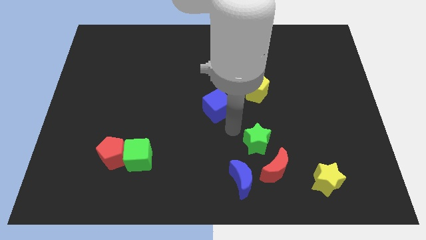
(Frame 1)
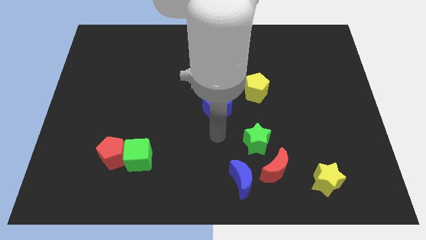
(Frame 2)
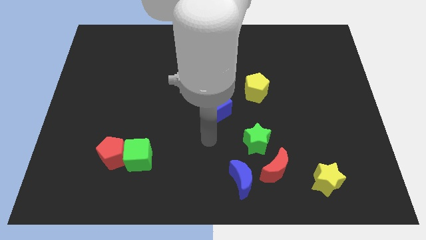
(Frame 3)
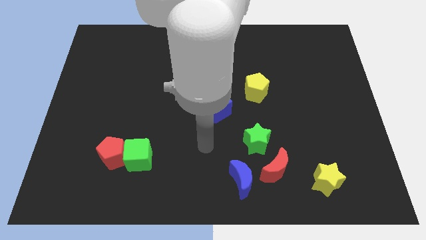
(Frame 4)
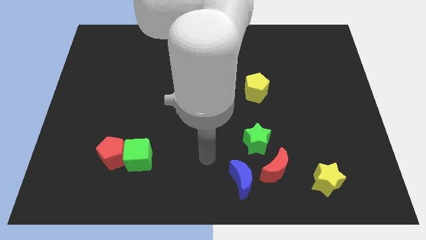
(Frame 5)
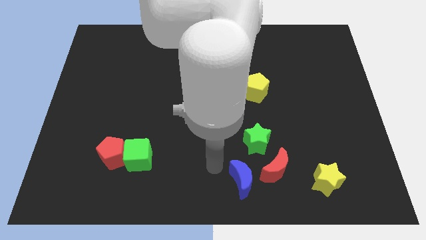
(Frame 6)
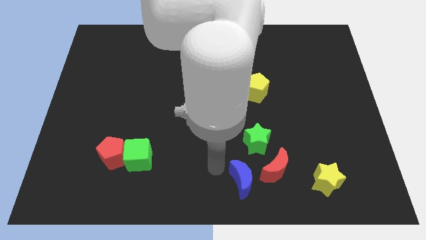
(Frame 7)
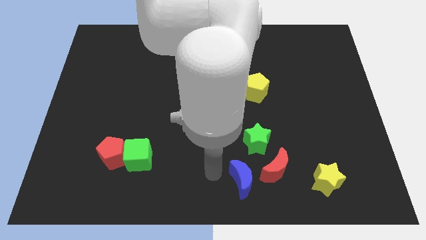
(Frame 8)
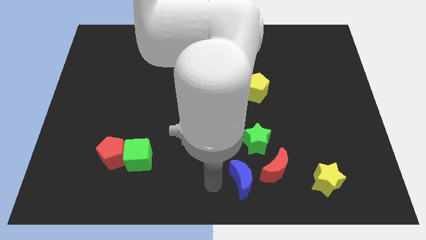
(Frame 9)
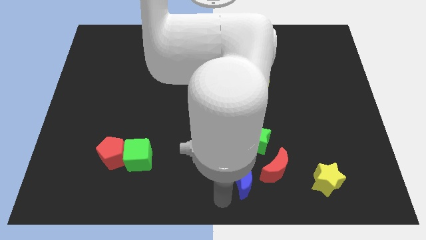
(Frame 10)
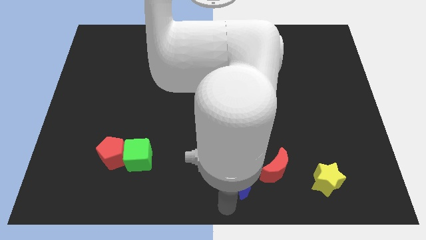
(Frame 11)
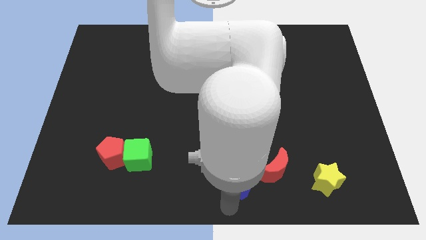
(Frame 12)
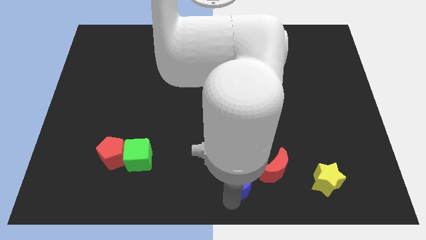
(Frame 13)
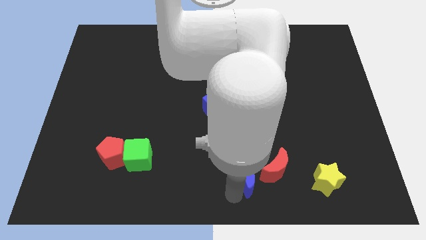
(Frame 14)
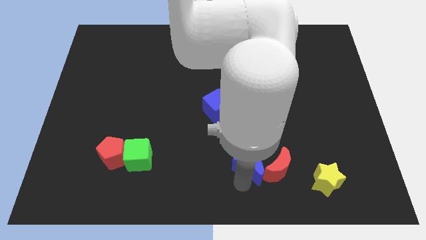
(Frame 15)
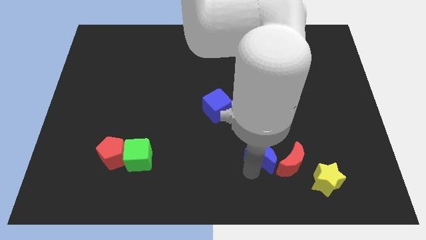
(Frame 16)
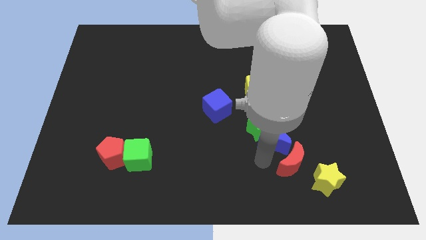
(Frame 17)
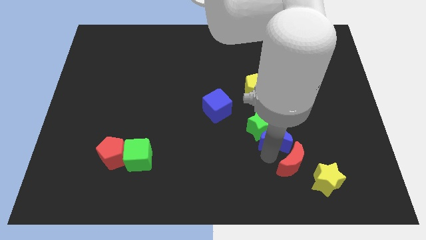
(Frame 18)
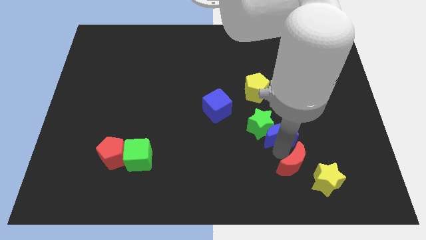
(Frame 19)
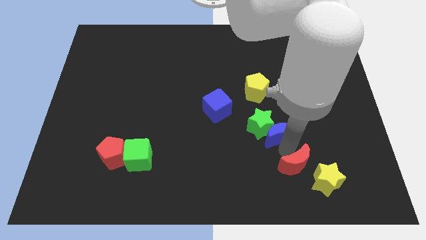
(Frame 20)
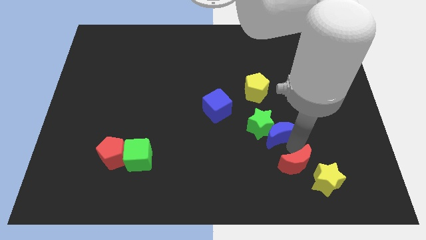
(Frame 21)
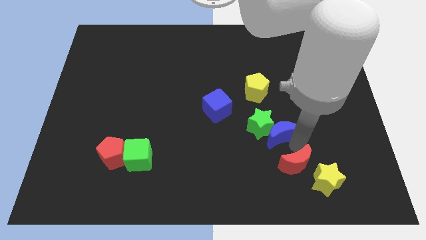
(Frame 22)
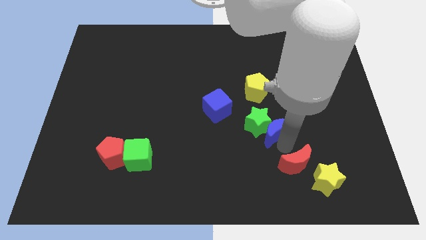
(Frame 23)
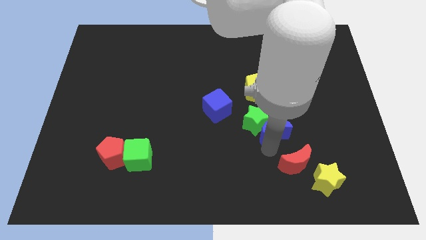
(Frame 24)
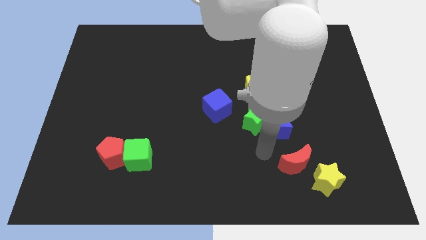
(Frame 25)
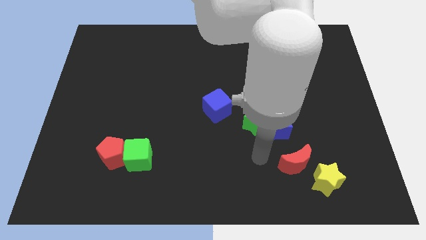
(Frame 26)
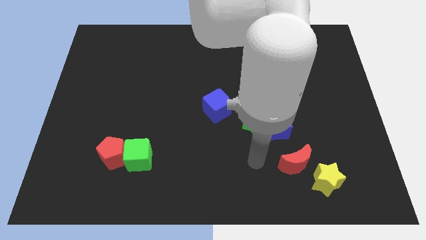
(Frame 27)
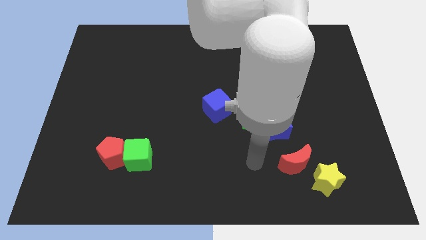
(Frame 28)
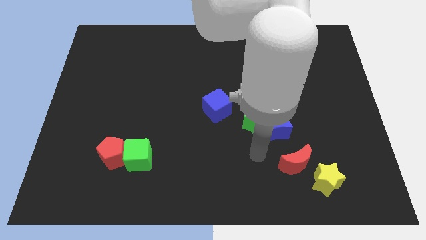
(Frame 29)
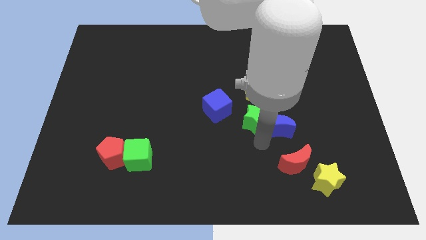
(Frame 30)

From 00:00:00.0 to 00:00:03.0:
push the blue moon in to the green star

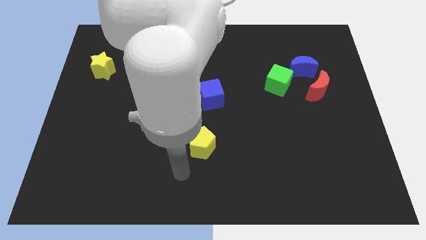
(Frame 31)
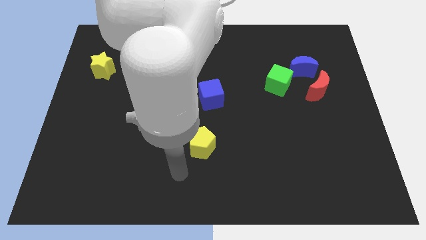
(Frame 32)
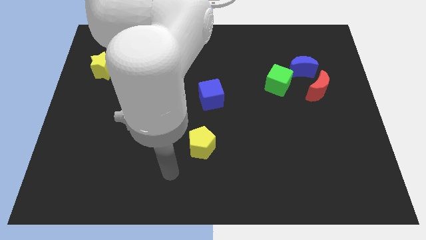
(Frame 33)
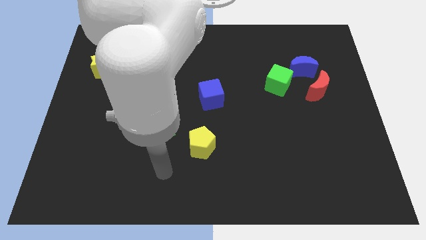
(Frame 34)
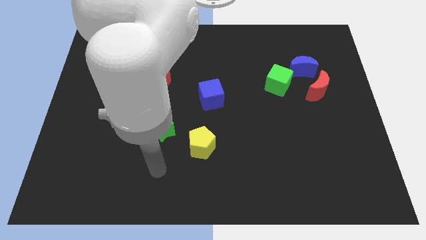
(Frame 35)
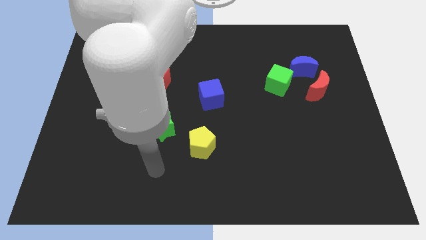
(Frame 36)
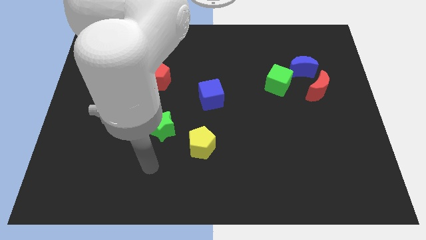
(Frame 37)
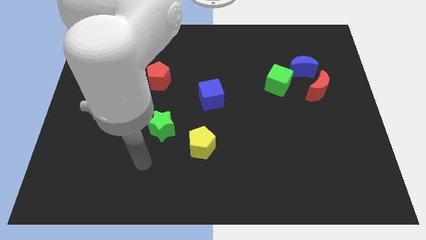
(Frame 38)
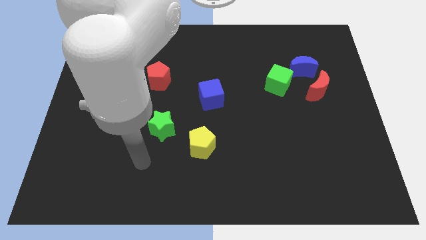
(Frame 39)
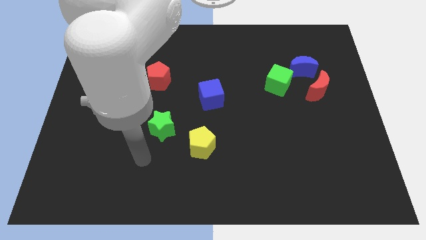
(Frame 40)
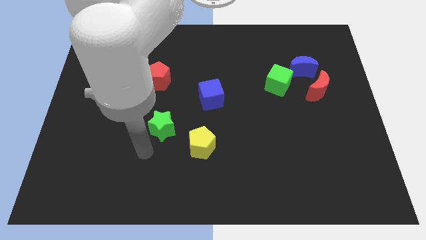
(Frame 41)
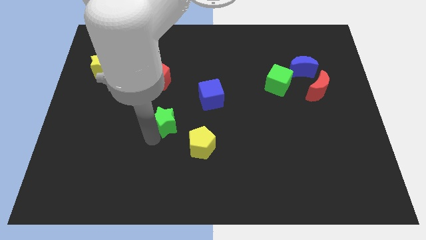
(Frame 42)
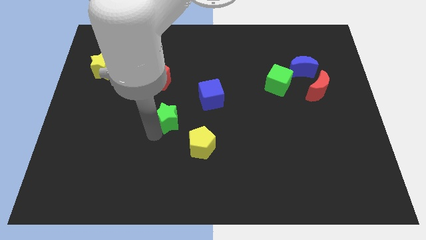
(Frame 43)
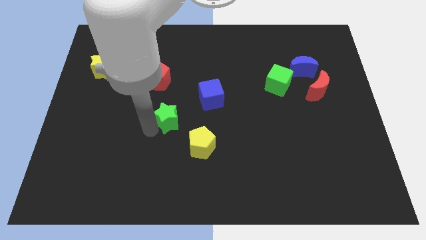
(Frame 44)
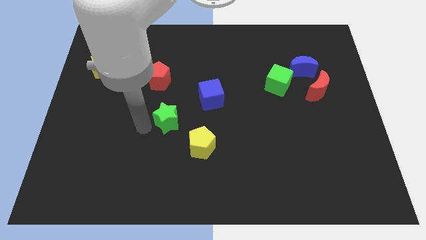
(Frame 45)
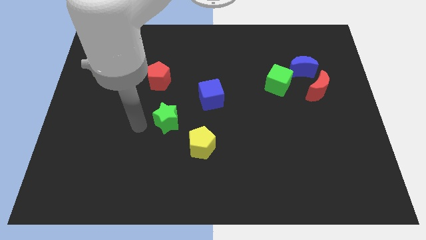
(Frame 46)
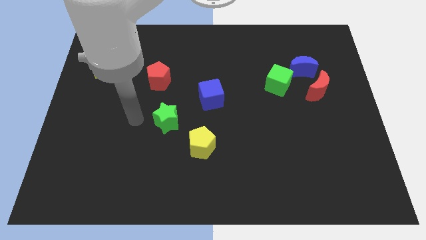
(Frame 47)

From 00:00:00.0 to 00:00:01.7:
push the green star upwards slightly

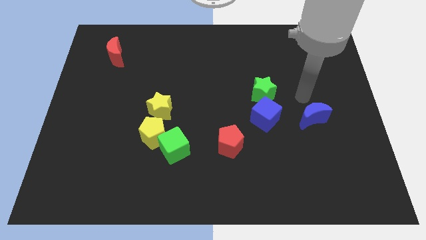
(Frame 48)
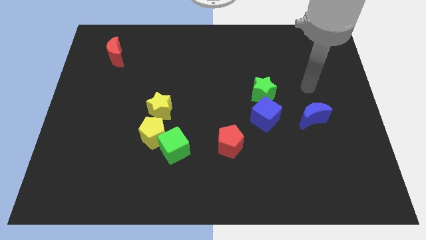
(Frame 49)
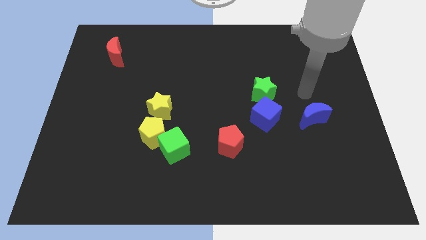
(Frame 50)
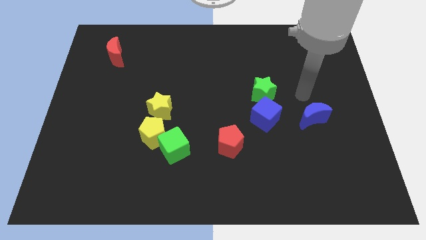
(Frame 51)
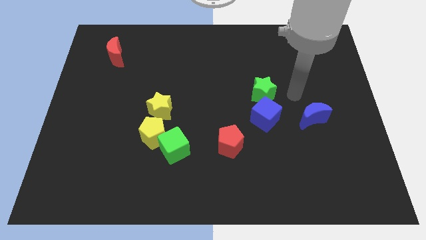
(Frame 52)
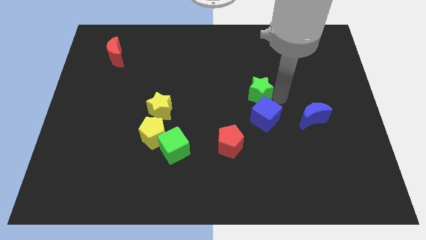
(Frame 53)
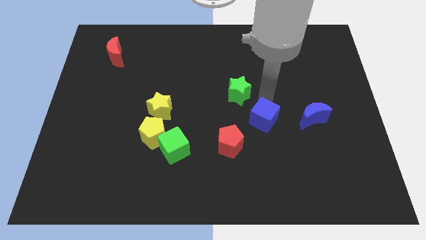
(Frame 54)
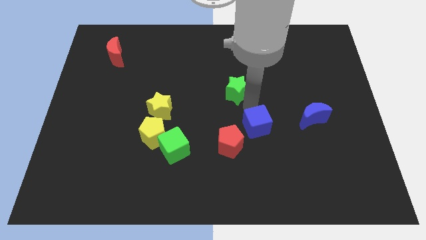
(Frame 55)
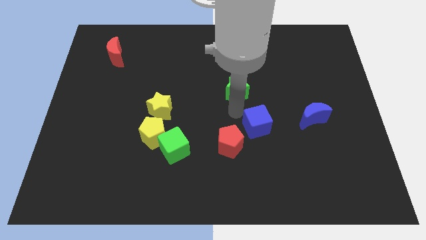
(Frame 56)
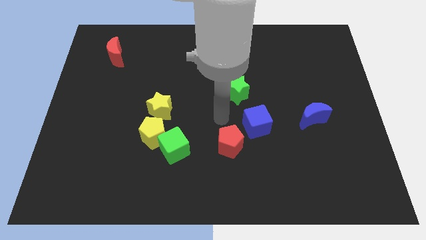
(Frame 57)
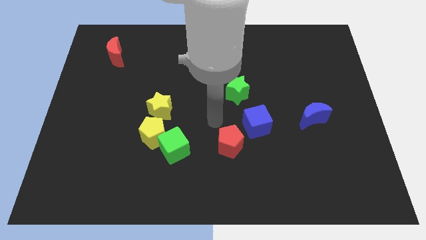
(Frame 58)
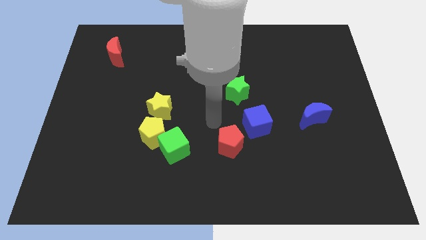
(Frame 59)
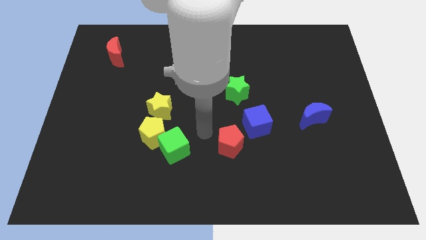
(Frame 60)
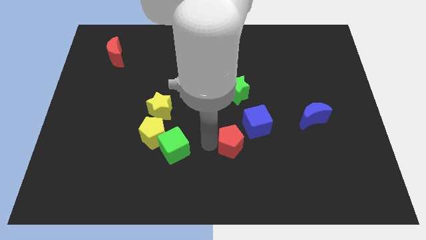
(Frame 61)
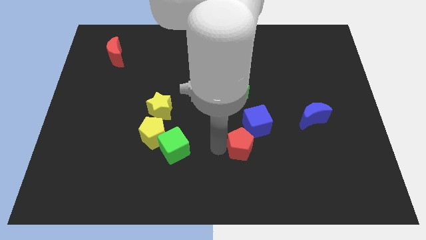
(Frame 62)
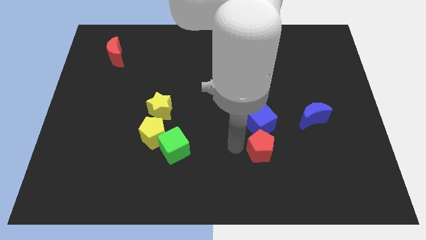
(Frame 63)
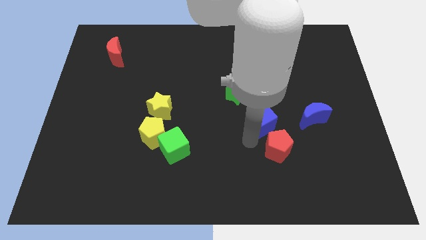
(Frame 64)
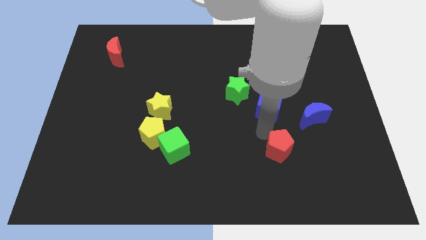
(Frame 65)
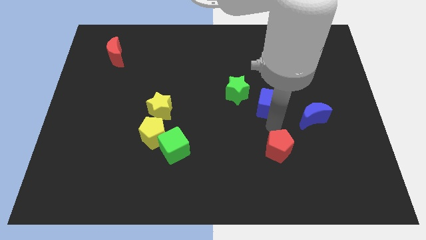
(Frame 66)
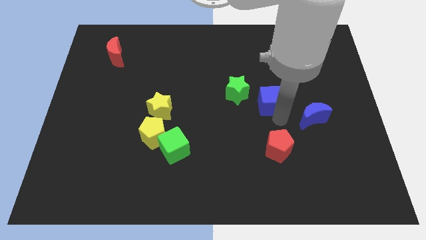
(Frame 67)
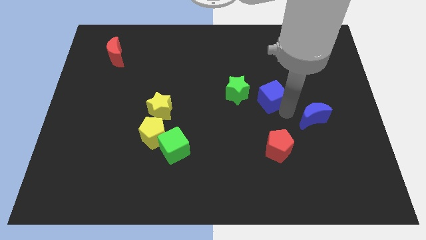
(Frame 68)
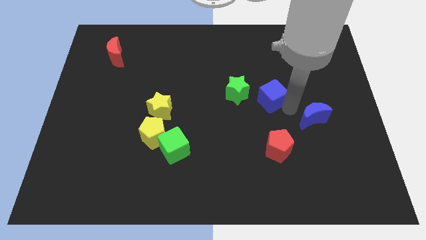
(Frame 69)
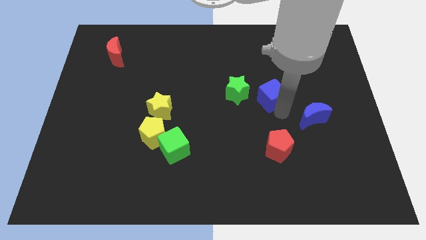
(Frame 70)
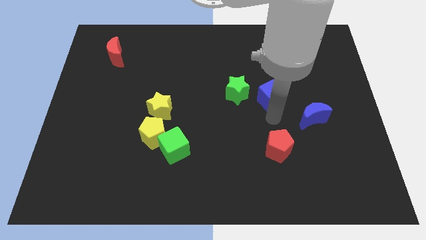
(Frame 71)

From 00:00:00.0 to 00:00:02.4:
separate the green star and blue cube

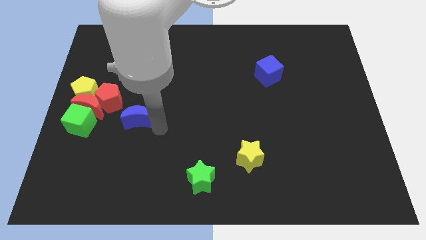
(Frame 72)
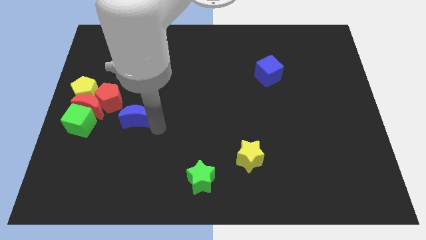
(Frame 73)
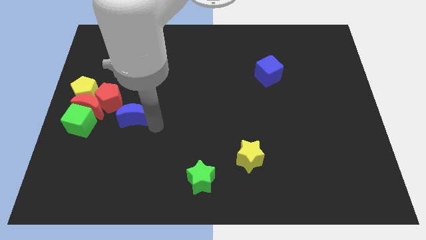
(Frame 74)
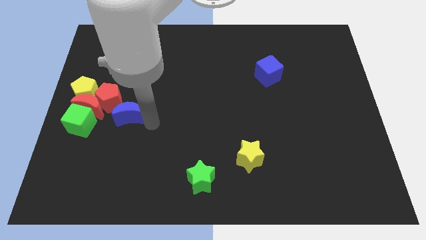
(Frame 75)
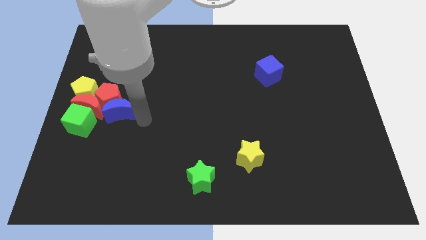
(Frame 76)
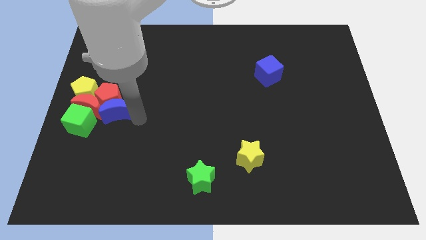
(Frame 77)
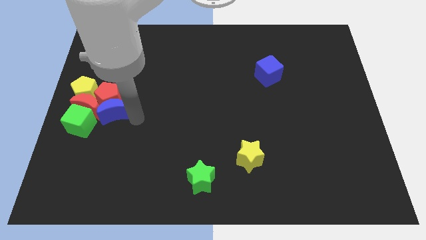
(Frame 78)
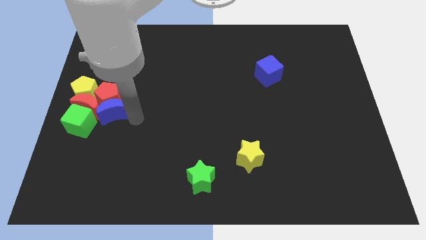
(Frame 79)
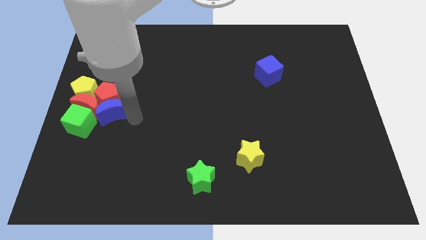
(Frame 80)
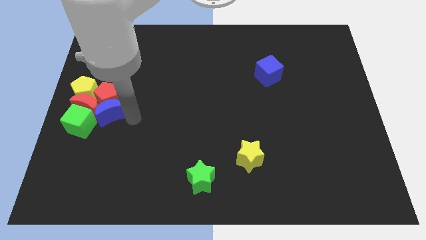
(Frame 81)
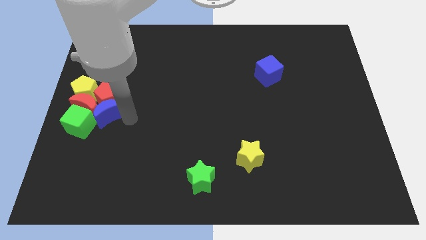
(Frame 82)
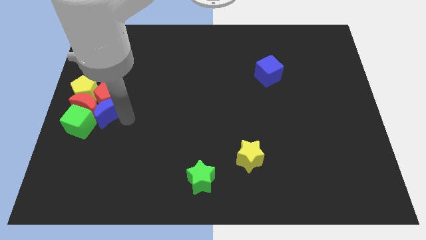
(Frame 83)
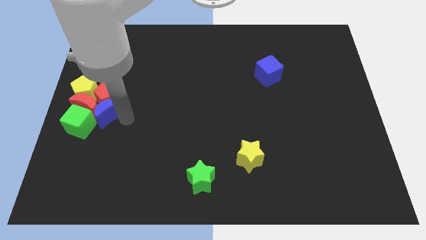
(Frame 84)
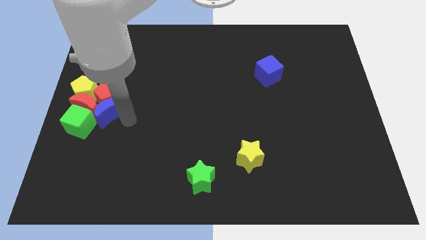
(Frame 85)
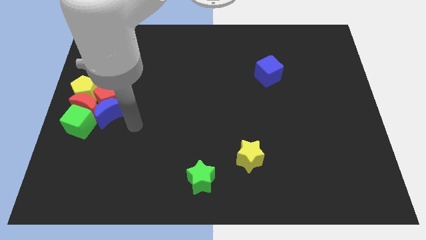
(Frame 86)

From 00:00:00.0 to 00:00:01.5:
move the blue crescent towards the group of blocks which are at the center left side of the board

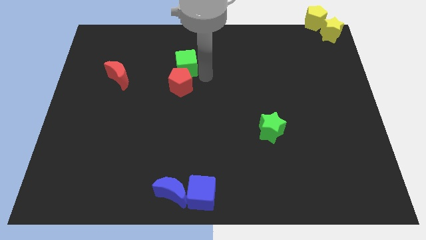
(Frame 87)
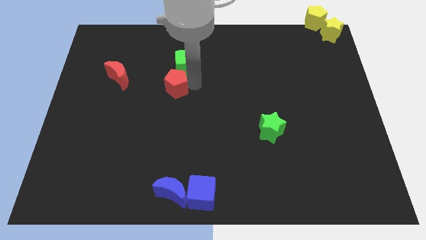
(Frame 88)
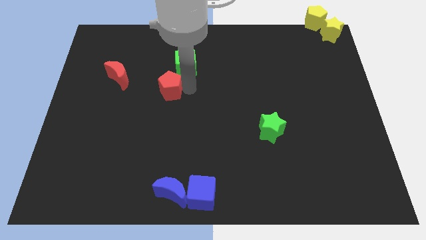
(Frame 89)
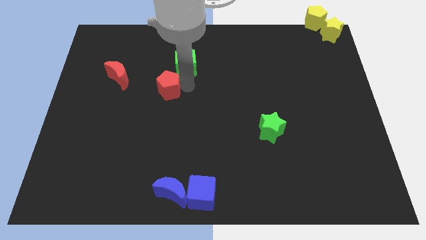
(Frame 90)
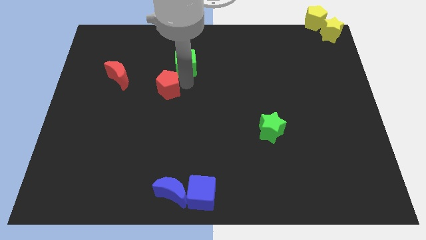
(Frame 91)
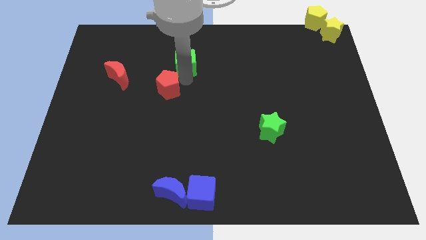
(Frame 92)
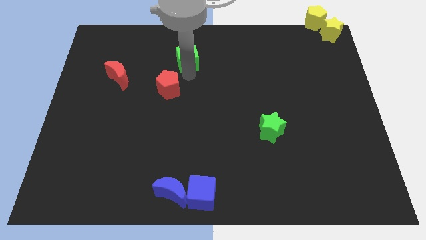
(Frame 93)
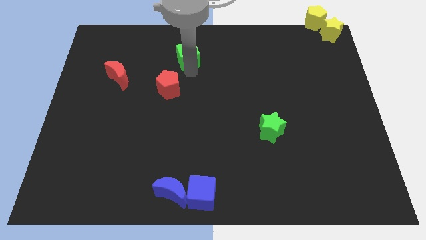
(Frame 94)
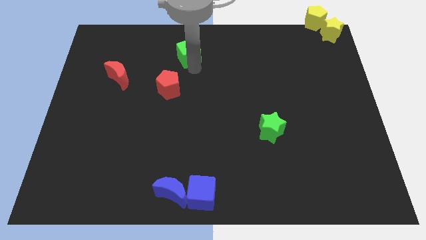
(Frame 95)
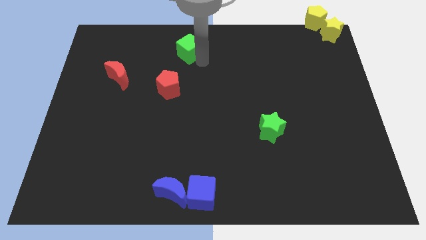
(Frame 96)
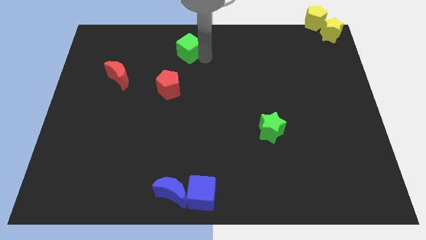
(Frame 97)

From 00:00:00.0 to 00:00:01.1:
separate green cube from red pentagon
